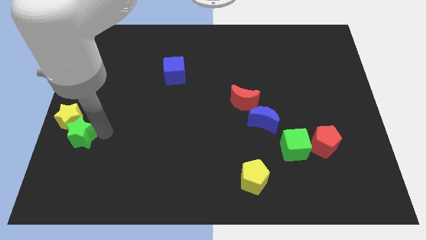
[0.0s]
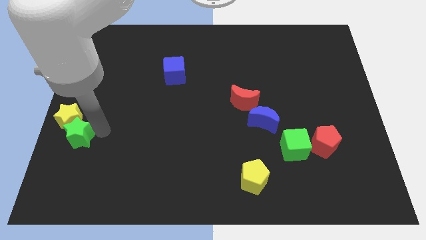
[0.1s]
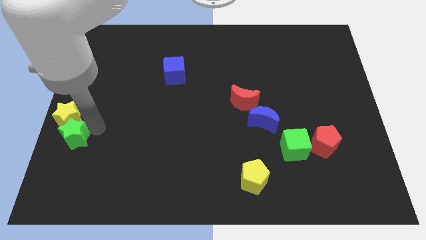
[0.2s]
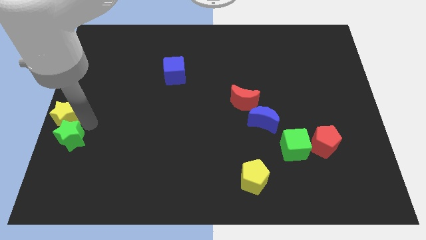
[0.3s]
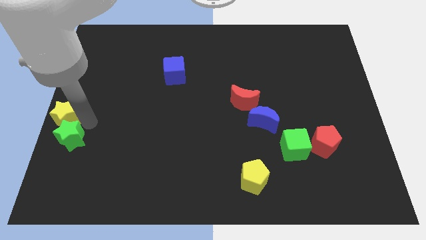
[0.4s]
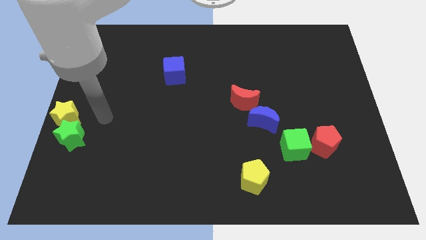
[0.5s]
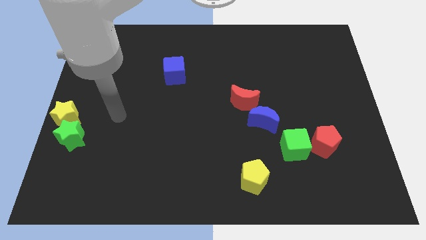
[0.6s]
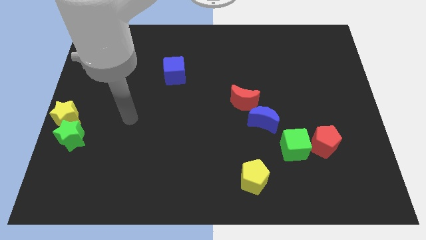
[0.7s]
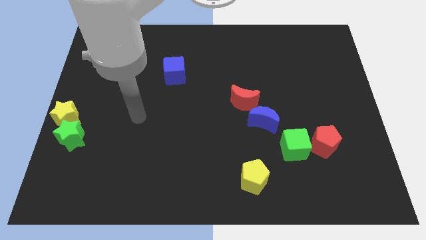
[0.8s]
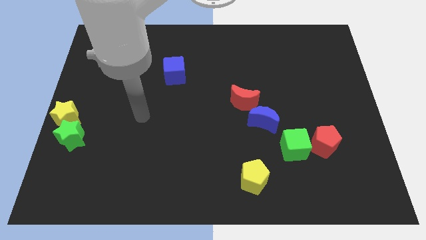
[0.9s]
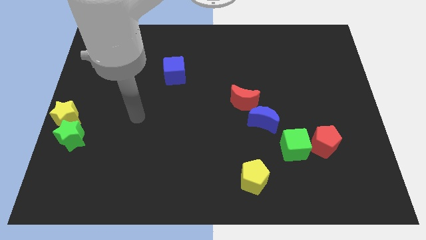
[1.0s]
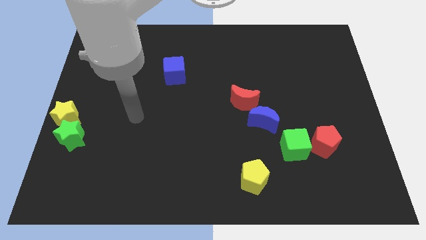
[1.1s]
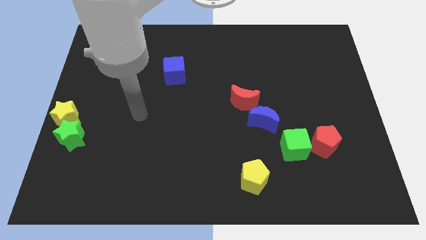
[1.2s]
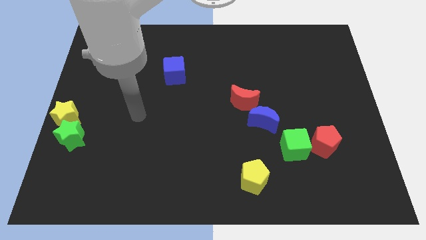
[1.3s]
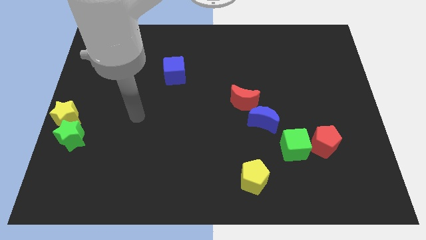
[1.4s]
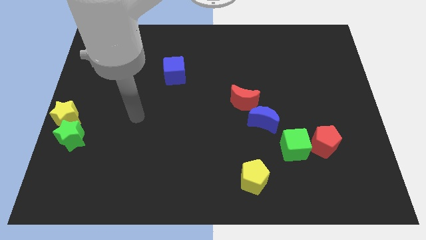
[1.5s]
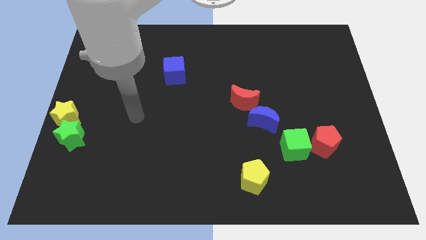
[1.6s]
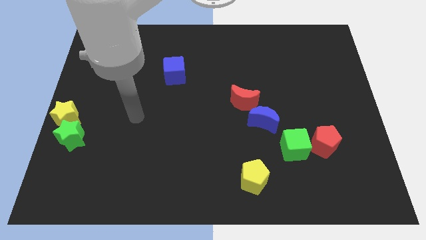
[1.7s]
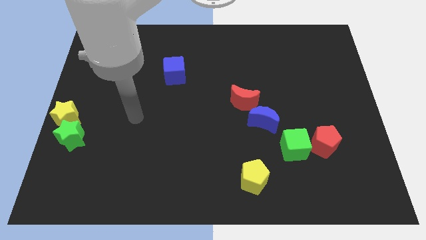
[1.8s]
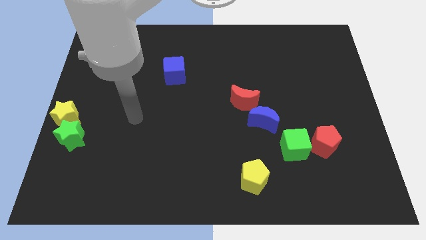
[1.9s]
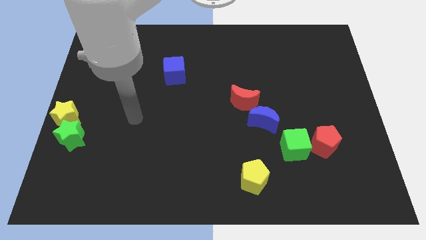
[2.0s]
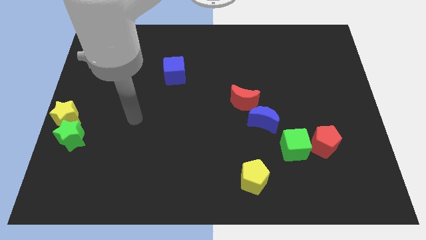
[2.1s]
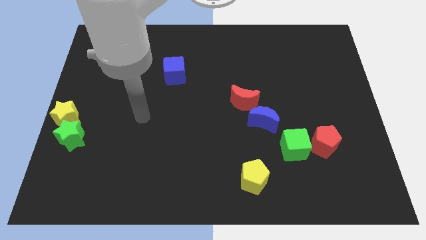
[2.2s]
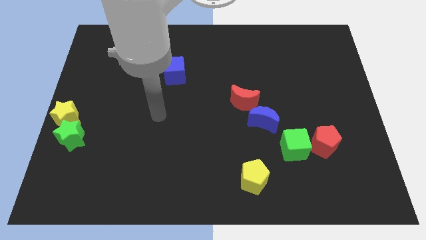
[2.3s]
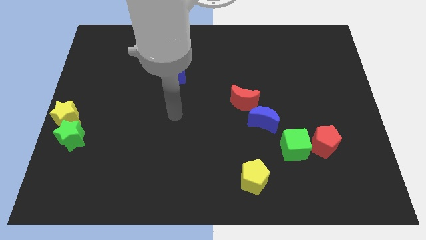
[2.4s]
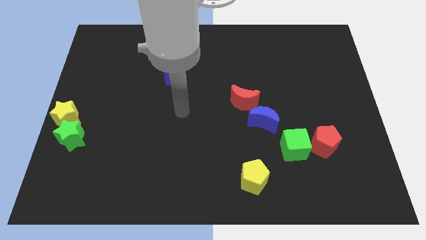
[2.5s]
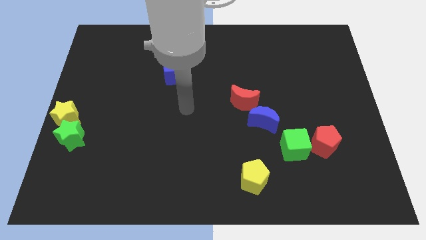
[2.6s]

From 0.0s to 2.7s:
push arm at the bottom of blue cube

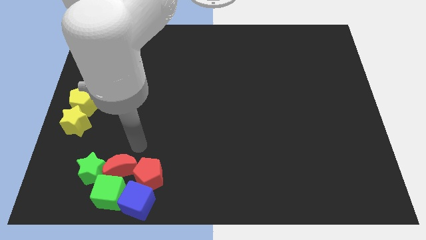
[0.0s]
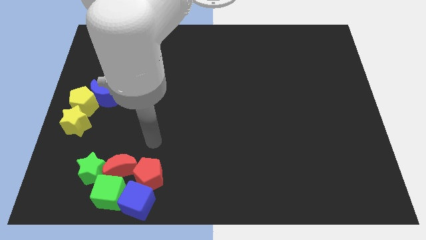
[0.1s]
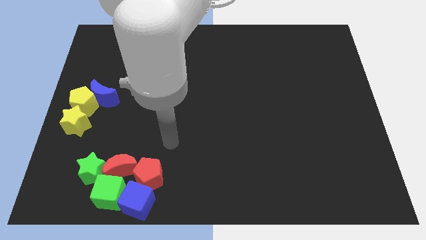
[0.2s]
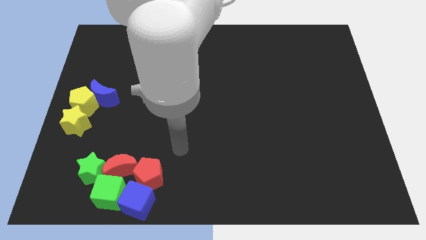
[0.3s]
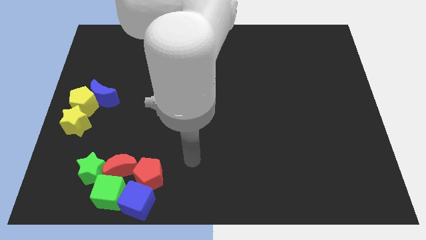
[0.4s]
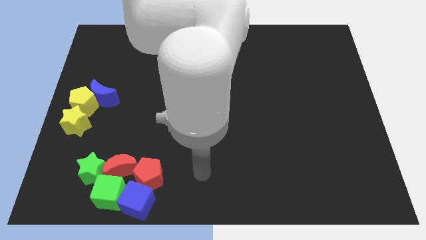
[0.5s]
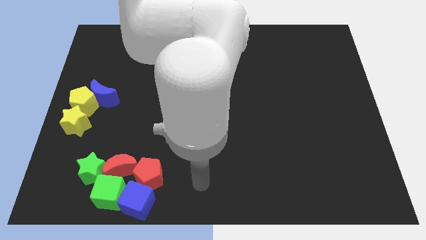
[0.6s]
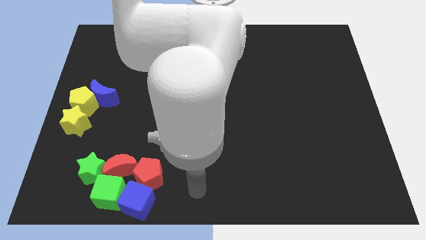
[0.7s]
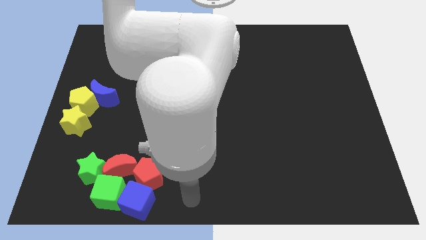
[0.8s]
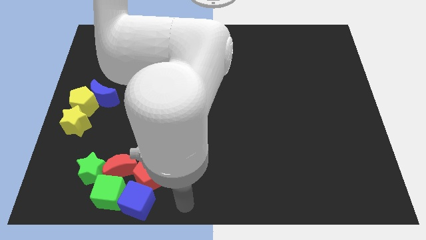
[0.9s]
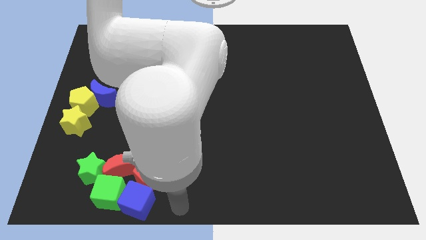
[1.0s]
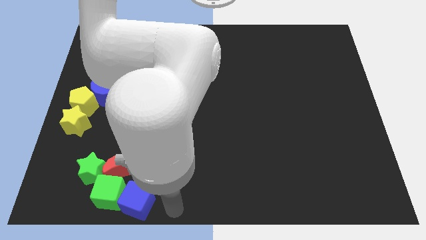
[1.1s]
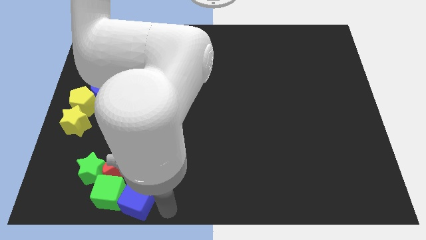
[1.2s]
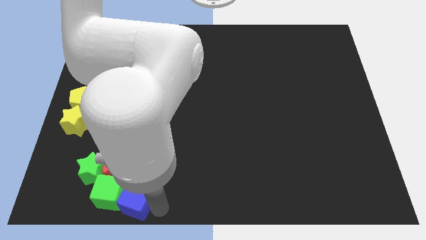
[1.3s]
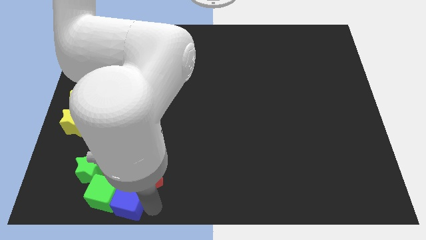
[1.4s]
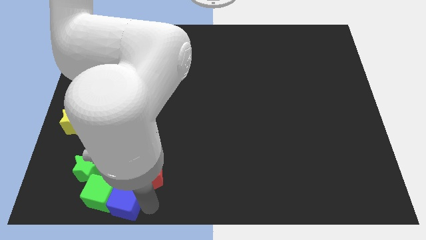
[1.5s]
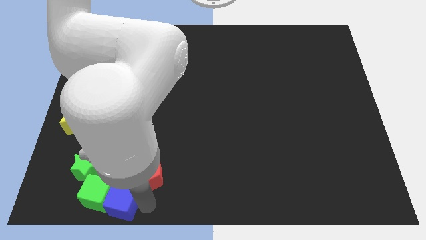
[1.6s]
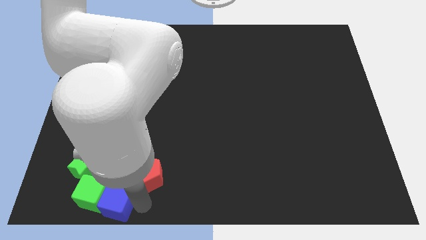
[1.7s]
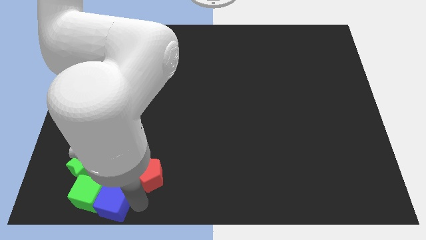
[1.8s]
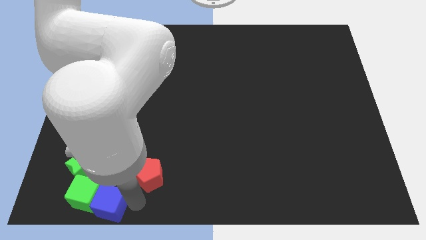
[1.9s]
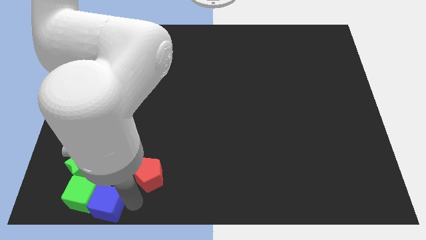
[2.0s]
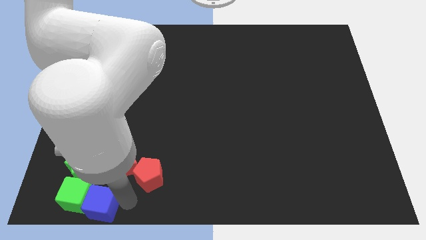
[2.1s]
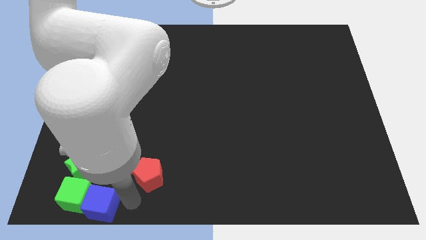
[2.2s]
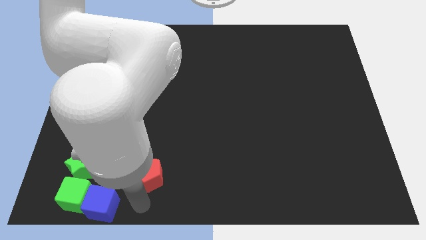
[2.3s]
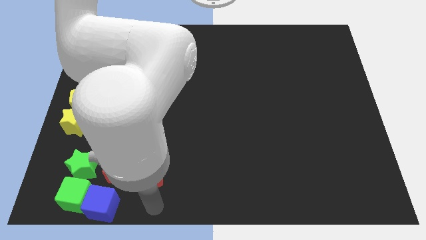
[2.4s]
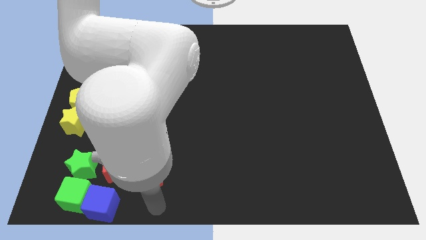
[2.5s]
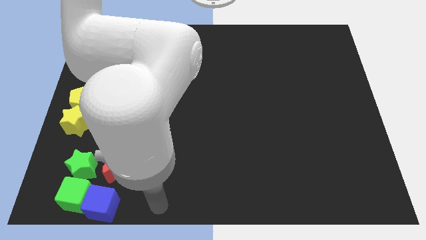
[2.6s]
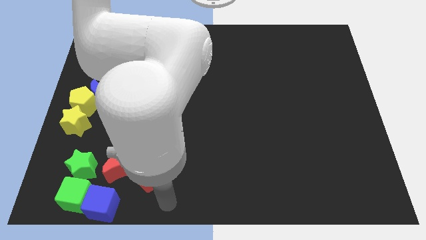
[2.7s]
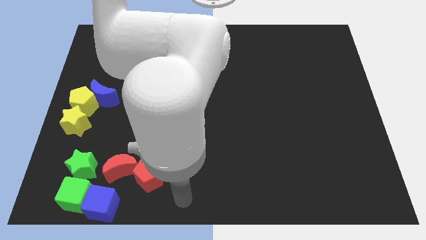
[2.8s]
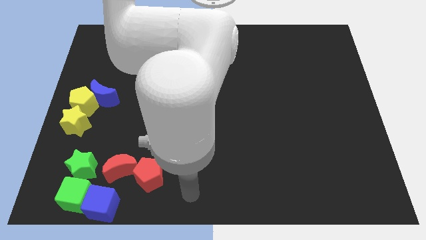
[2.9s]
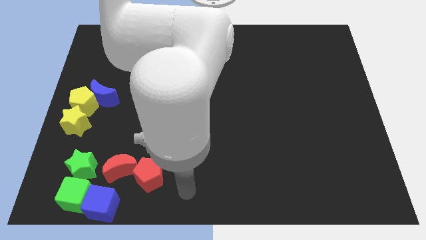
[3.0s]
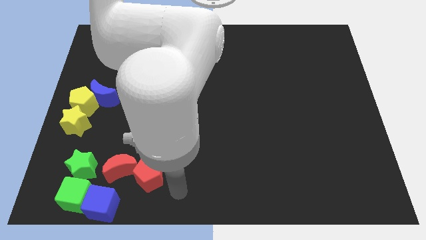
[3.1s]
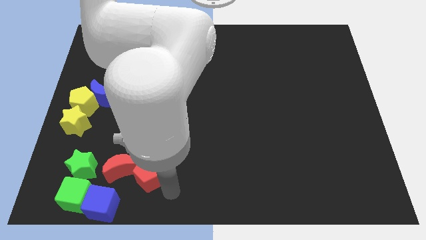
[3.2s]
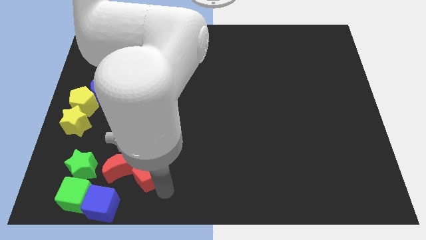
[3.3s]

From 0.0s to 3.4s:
move green and blue cubes to the bottom left of board

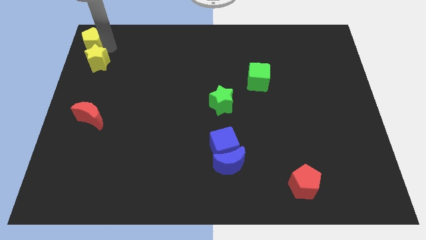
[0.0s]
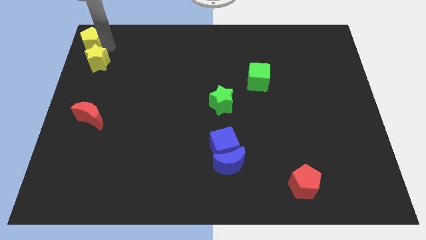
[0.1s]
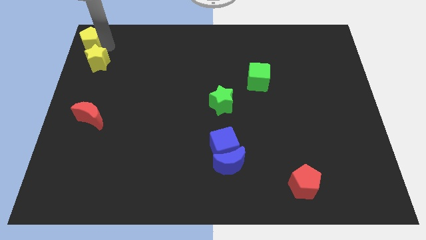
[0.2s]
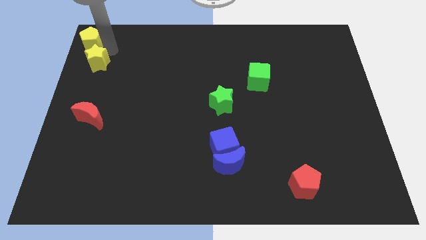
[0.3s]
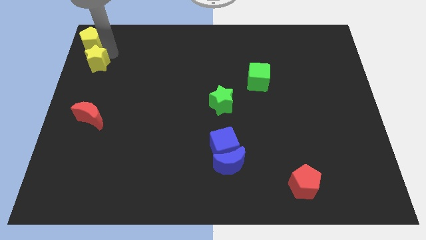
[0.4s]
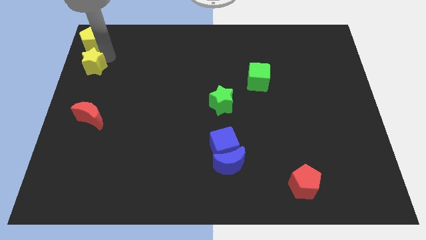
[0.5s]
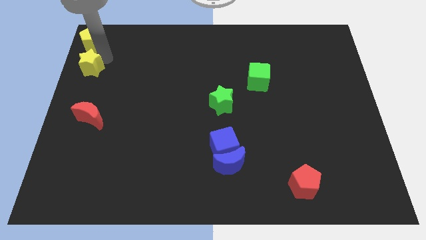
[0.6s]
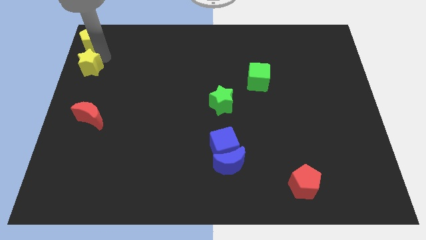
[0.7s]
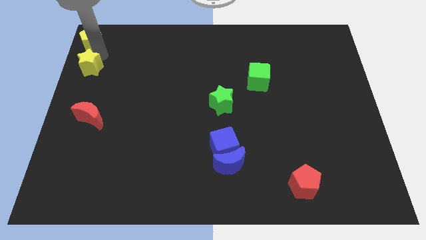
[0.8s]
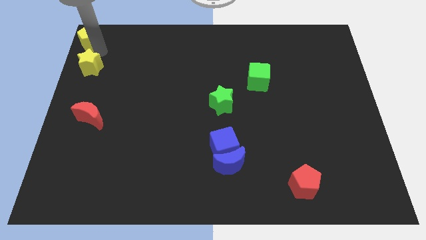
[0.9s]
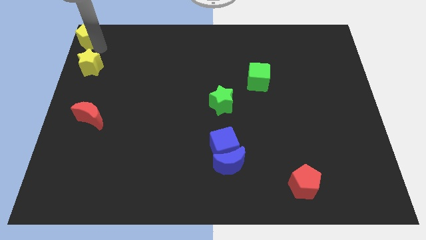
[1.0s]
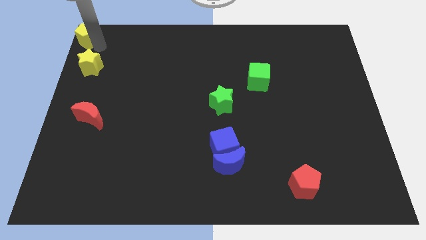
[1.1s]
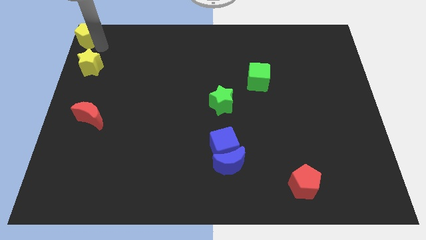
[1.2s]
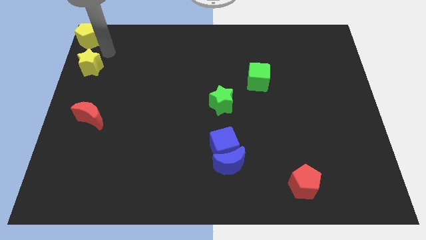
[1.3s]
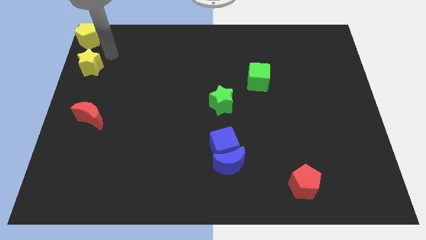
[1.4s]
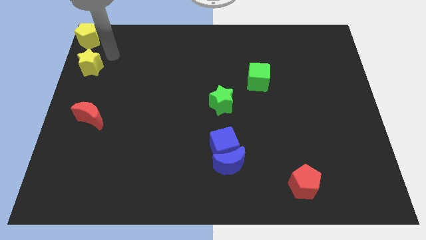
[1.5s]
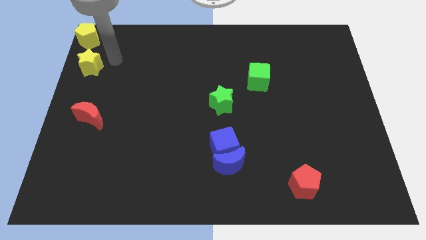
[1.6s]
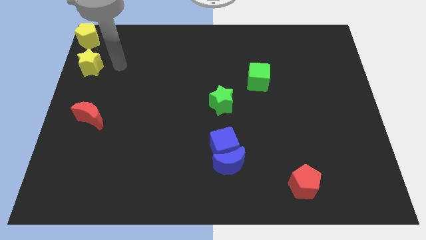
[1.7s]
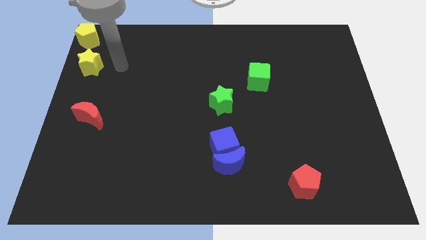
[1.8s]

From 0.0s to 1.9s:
move the yellow pentagon to the top left corner of the board

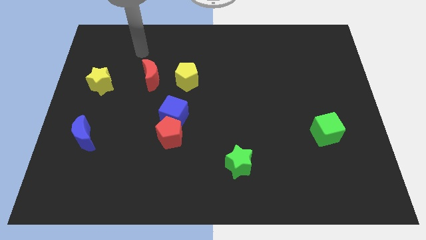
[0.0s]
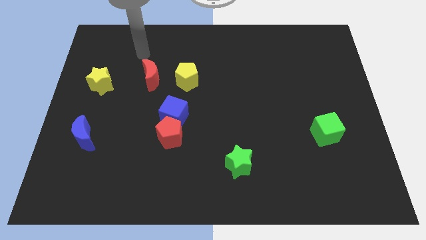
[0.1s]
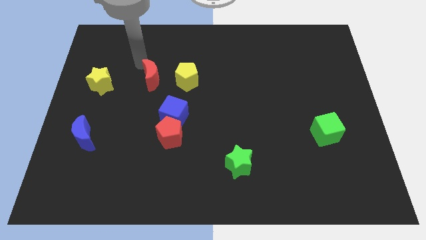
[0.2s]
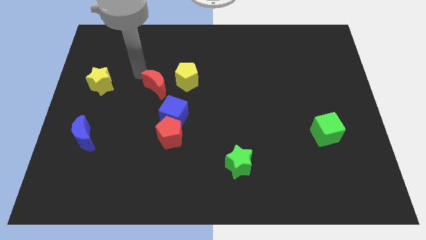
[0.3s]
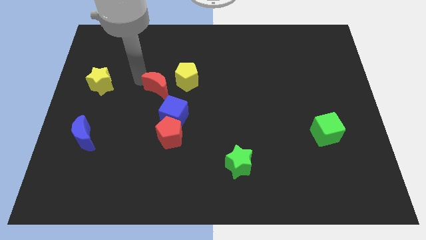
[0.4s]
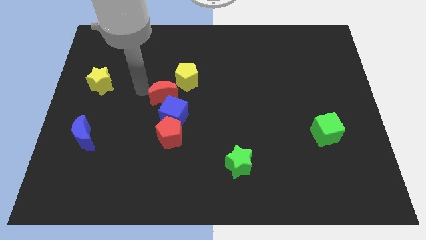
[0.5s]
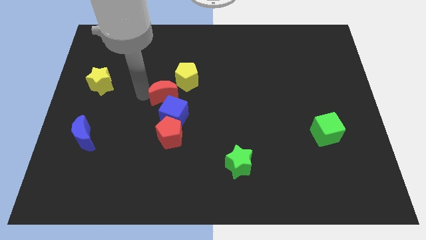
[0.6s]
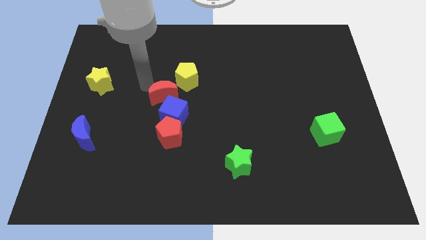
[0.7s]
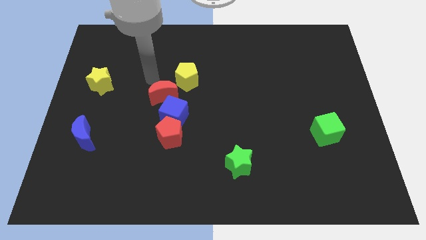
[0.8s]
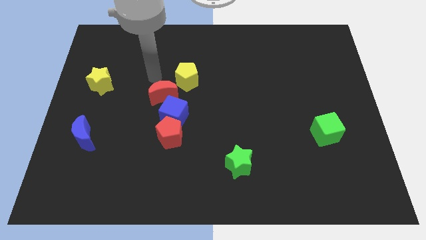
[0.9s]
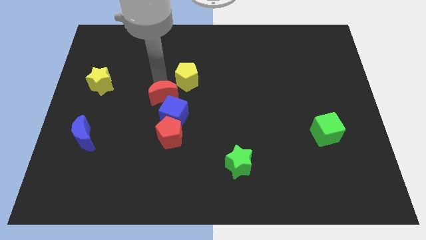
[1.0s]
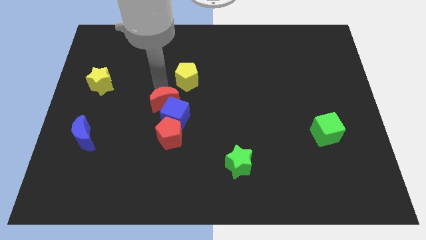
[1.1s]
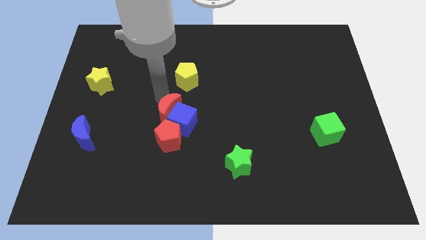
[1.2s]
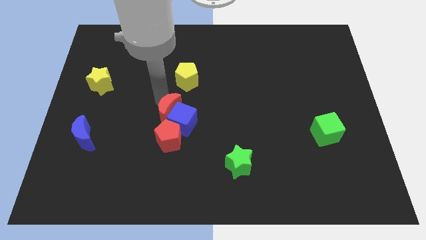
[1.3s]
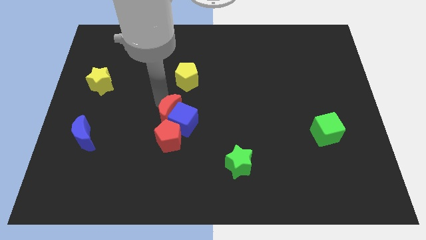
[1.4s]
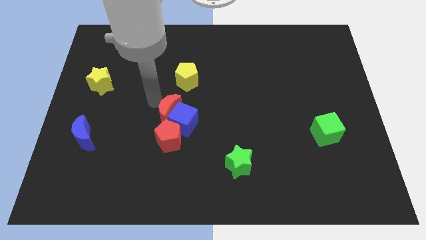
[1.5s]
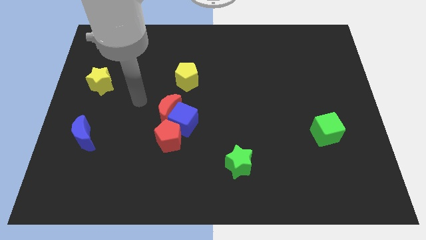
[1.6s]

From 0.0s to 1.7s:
push the red crescent into the blue blue cube
